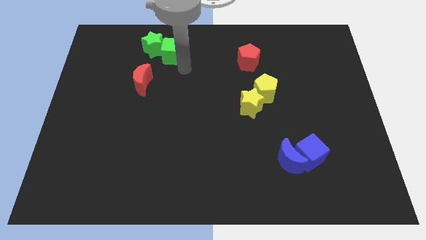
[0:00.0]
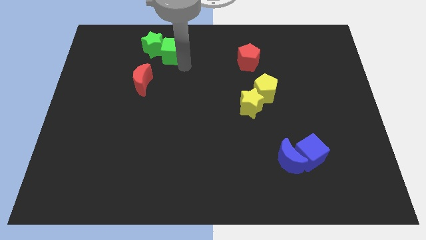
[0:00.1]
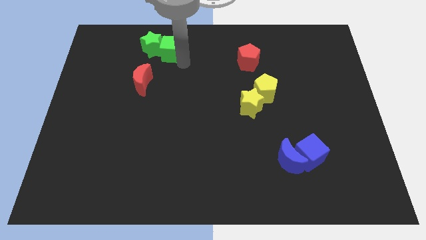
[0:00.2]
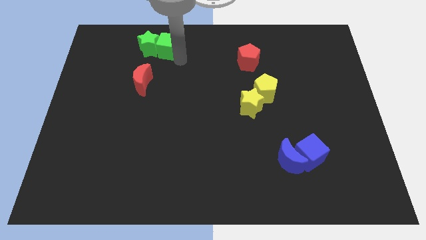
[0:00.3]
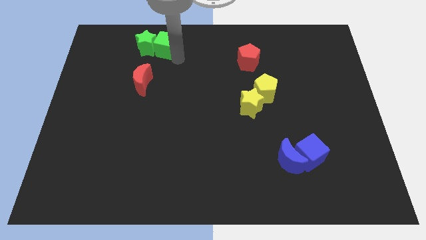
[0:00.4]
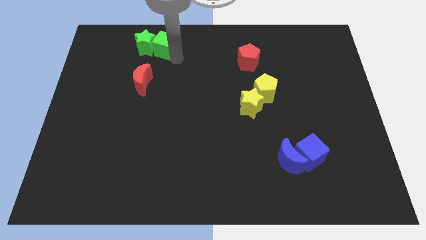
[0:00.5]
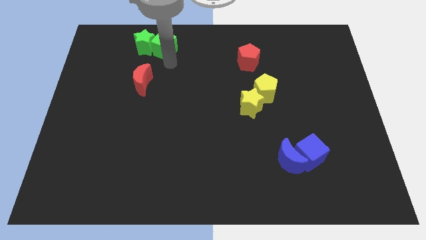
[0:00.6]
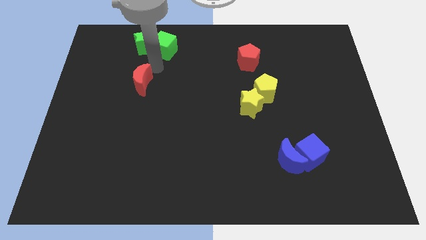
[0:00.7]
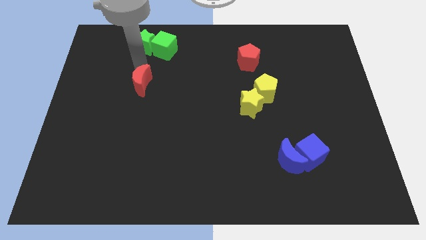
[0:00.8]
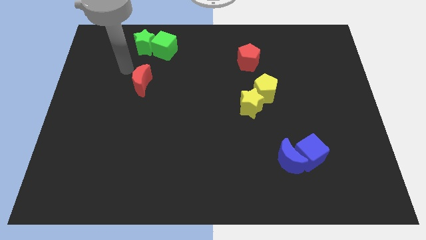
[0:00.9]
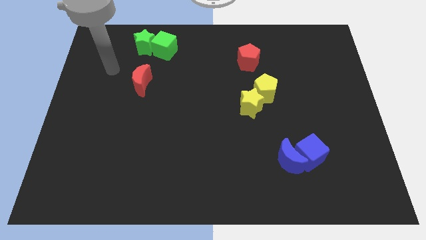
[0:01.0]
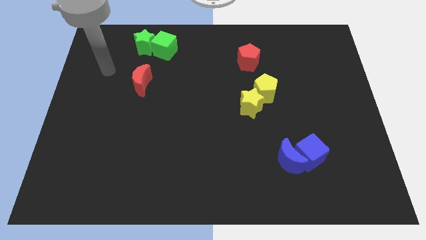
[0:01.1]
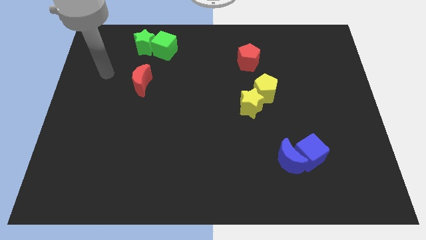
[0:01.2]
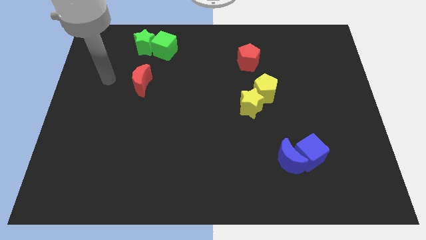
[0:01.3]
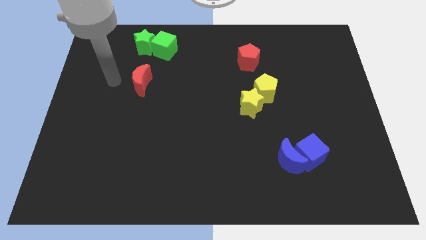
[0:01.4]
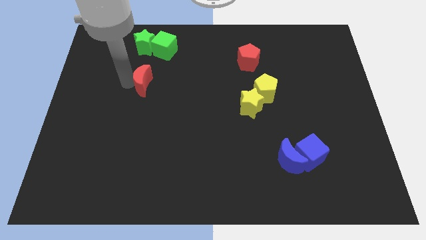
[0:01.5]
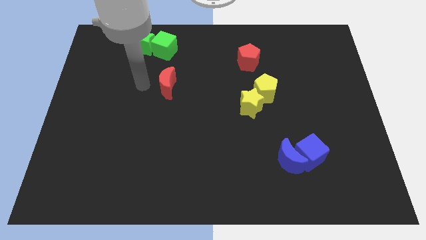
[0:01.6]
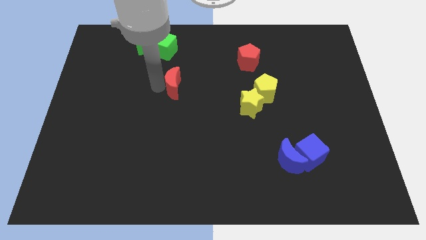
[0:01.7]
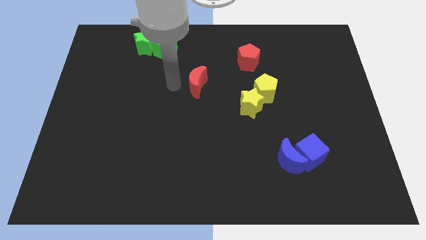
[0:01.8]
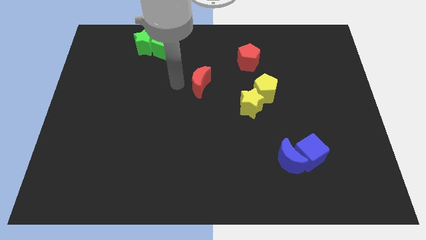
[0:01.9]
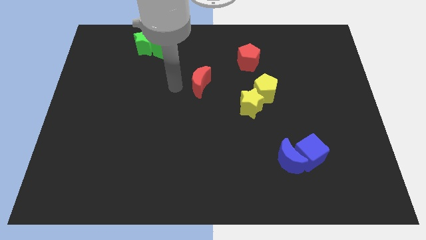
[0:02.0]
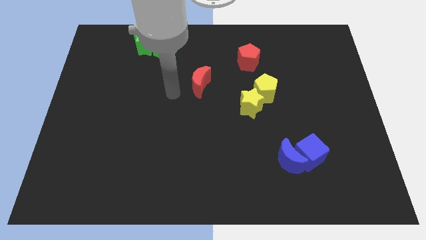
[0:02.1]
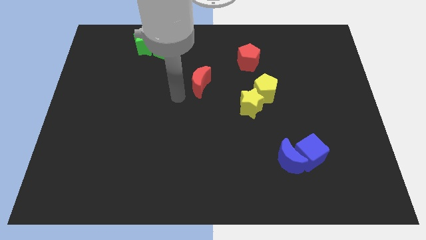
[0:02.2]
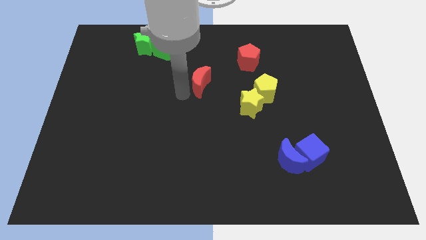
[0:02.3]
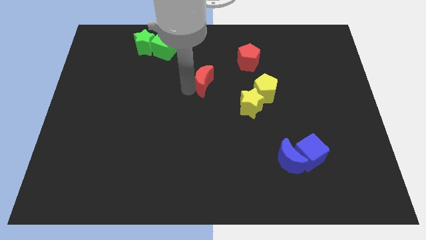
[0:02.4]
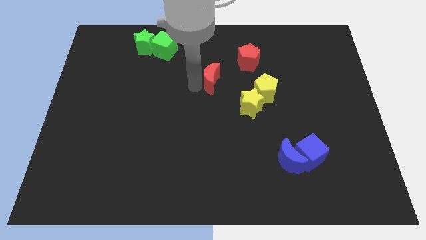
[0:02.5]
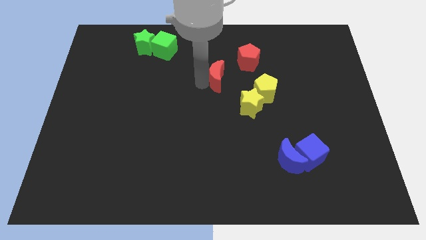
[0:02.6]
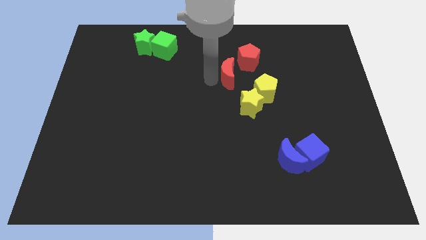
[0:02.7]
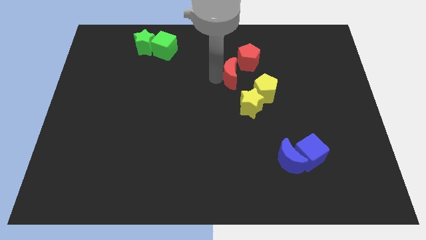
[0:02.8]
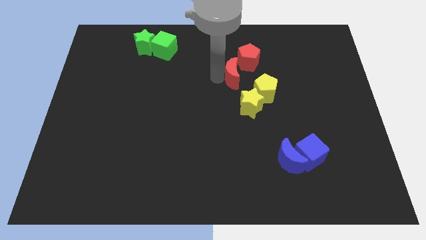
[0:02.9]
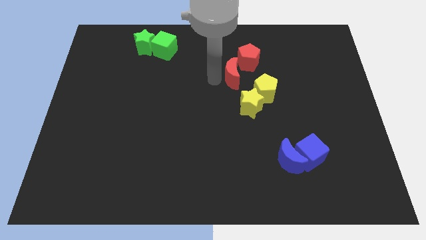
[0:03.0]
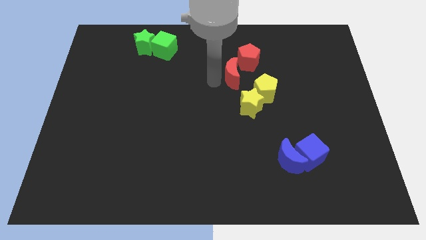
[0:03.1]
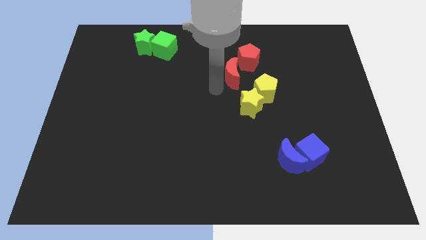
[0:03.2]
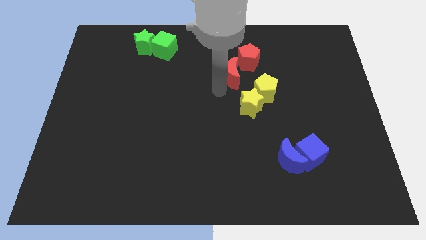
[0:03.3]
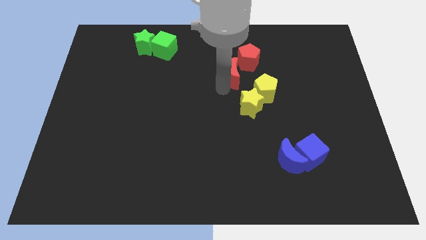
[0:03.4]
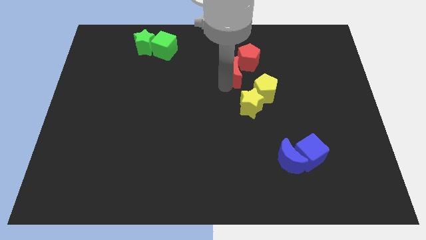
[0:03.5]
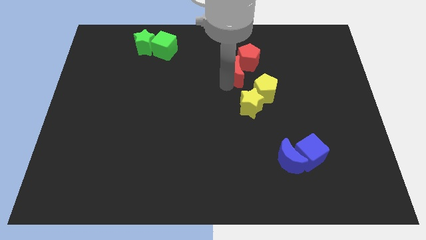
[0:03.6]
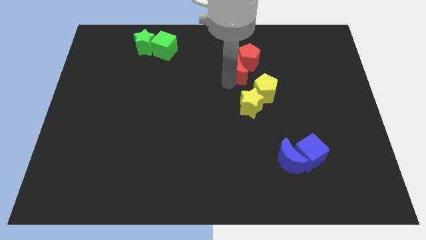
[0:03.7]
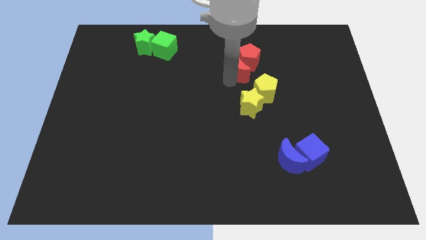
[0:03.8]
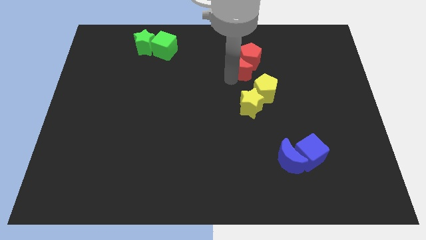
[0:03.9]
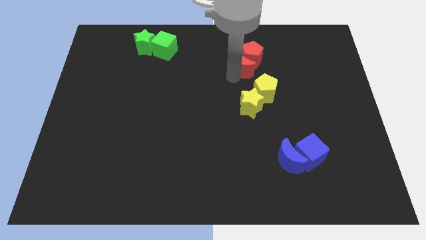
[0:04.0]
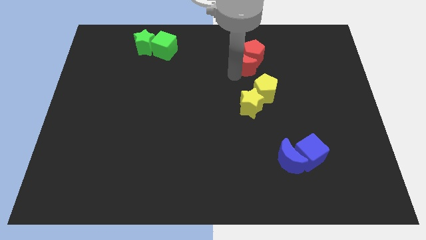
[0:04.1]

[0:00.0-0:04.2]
push the red crescent into red pentagon

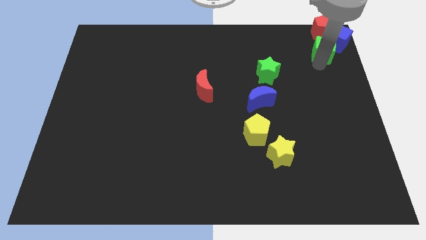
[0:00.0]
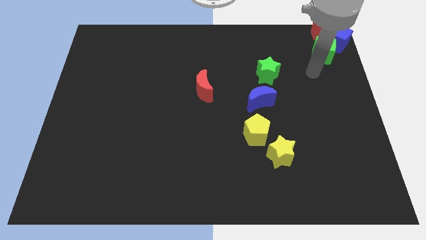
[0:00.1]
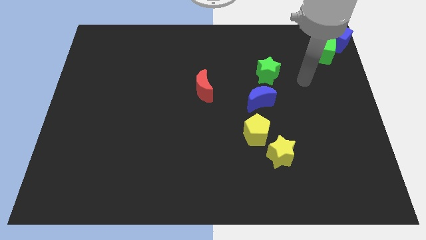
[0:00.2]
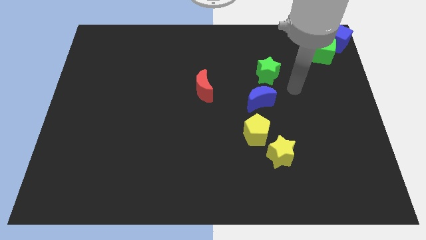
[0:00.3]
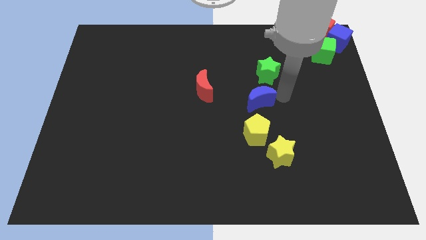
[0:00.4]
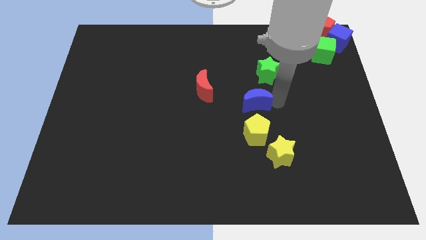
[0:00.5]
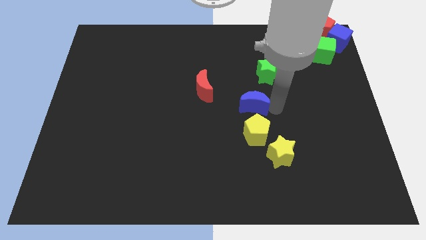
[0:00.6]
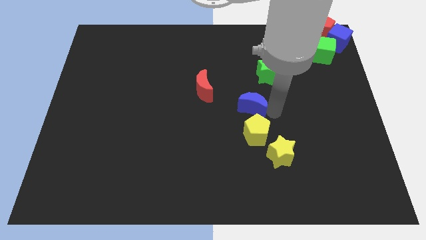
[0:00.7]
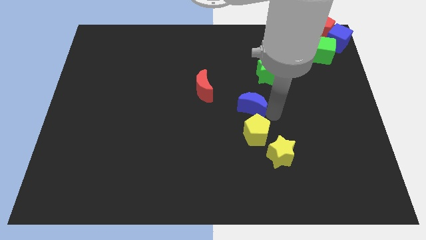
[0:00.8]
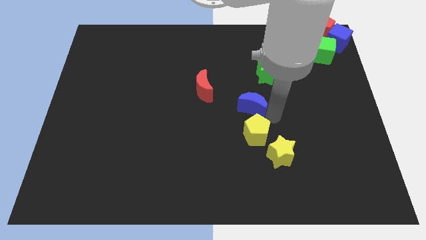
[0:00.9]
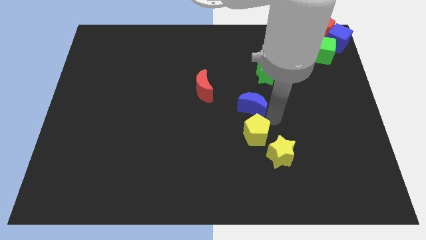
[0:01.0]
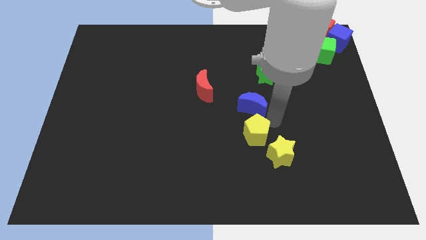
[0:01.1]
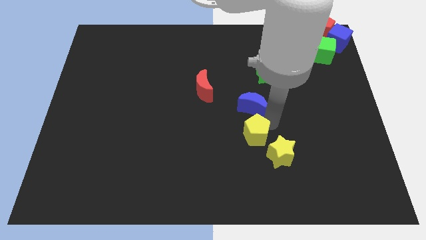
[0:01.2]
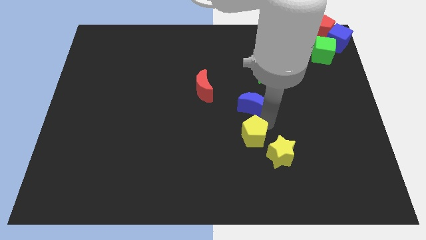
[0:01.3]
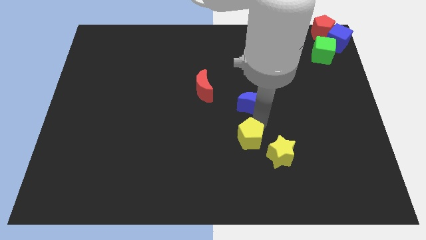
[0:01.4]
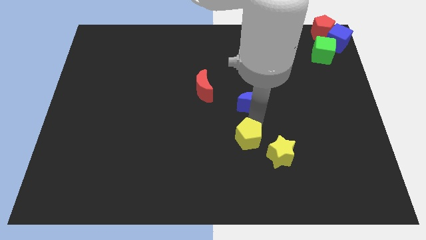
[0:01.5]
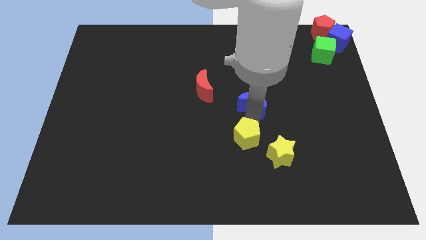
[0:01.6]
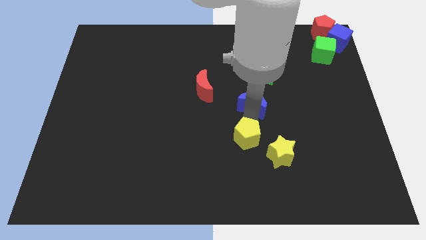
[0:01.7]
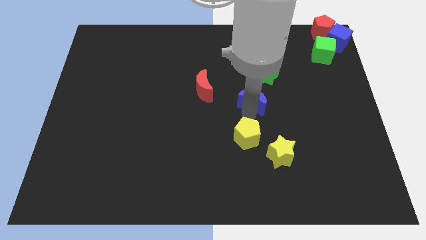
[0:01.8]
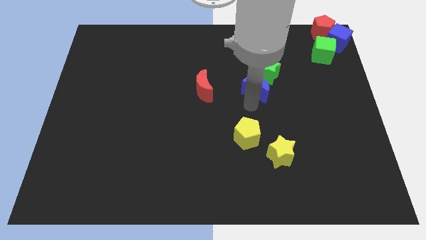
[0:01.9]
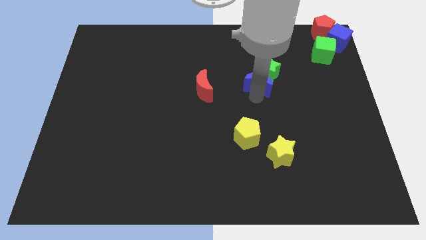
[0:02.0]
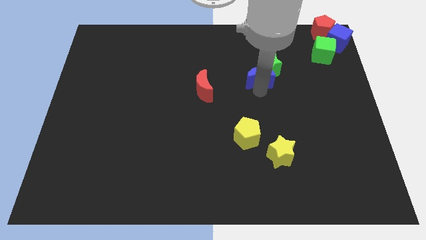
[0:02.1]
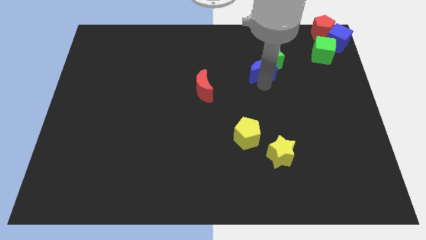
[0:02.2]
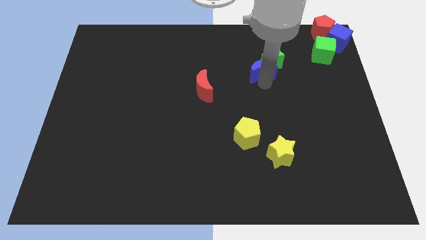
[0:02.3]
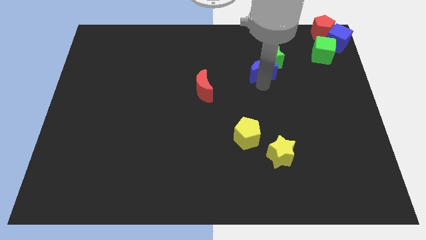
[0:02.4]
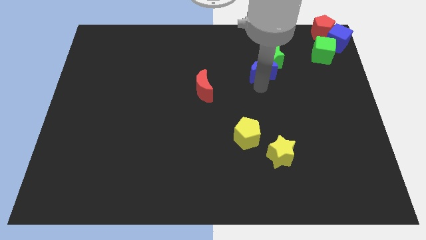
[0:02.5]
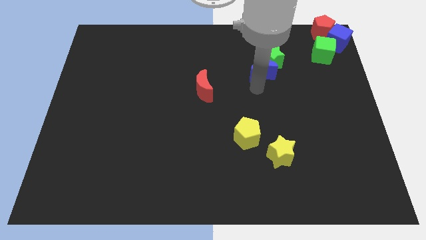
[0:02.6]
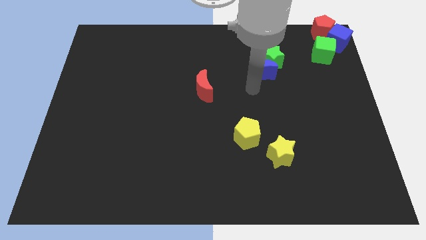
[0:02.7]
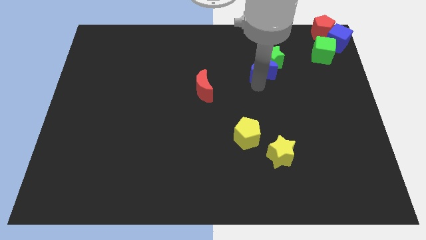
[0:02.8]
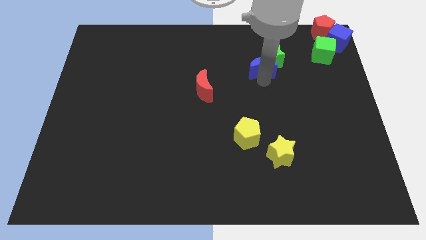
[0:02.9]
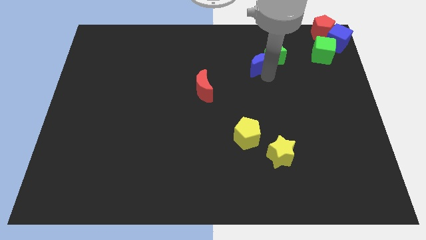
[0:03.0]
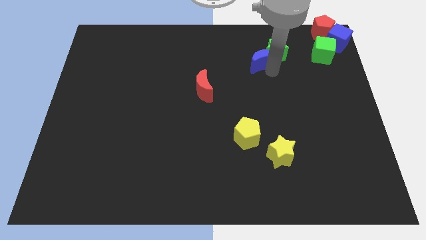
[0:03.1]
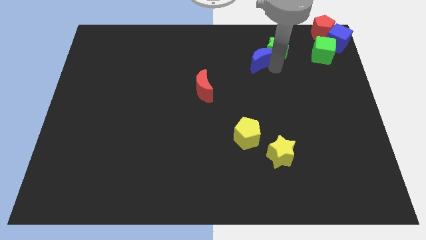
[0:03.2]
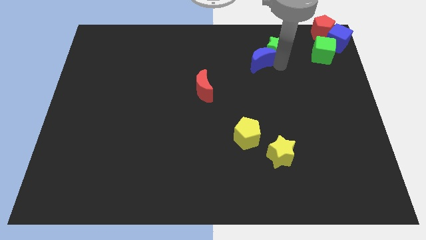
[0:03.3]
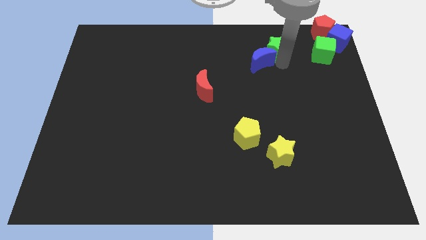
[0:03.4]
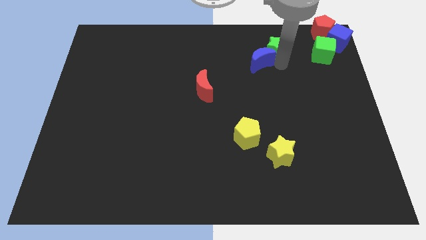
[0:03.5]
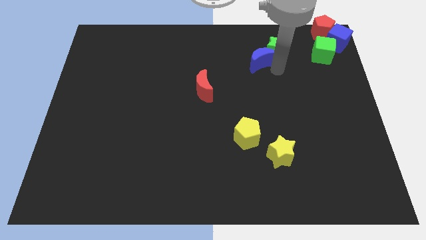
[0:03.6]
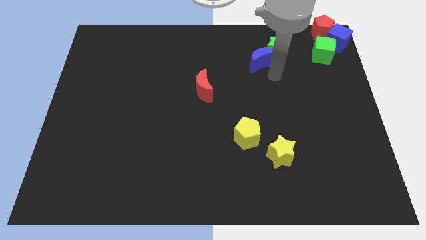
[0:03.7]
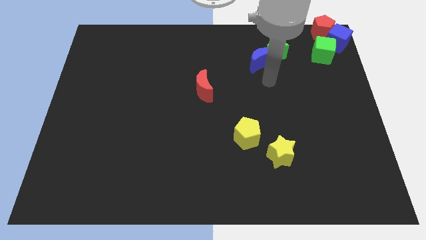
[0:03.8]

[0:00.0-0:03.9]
push the blue crescent into the green star

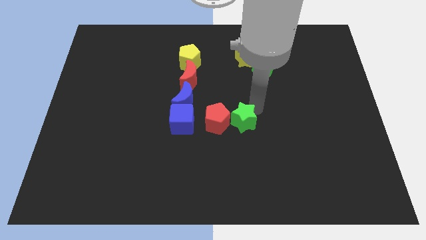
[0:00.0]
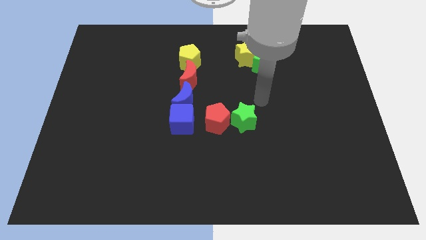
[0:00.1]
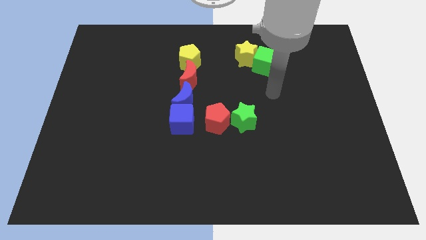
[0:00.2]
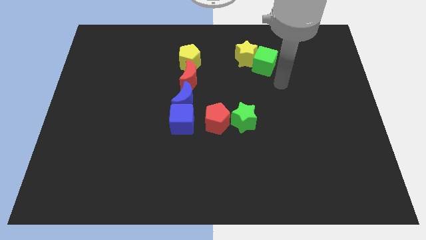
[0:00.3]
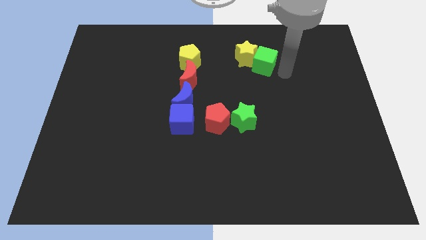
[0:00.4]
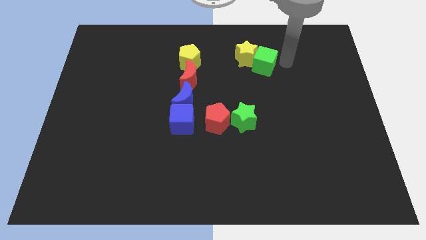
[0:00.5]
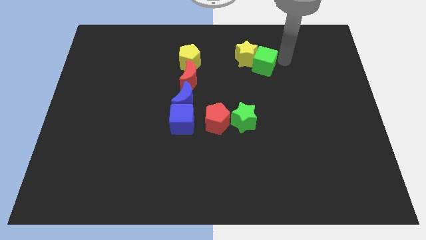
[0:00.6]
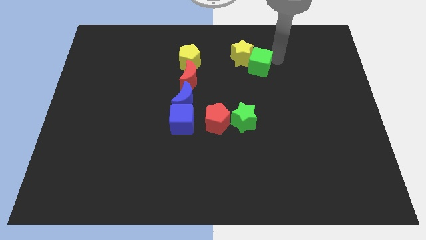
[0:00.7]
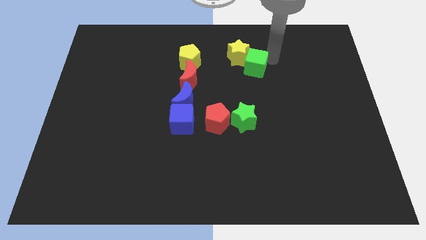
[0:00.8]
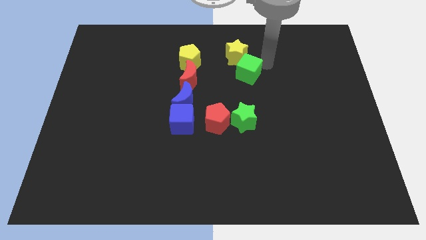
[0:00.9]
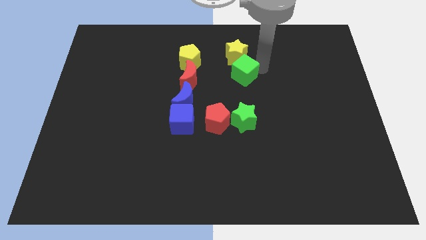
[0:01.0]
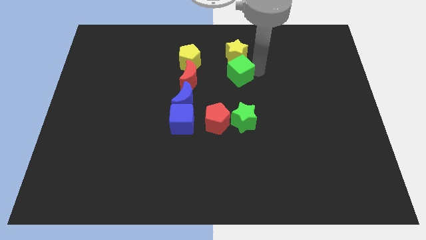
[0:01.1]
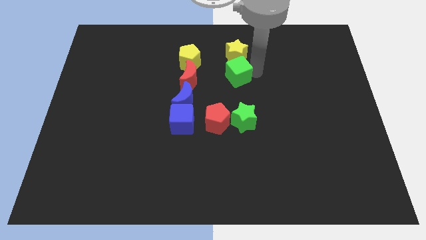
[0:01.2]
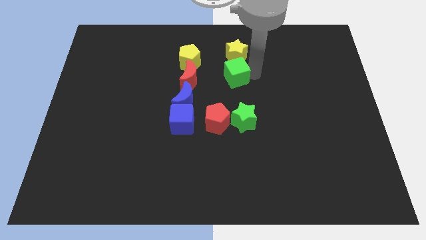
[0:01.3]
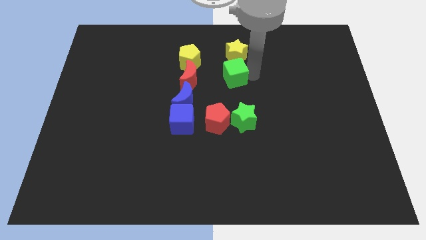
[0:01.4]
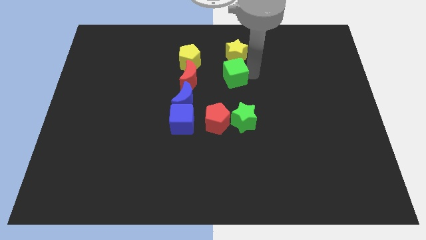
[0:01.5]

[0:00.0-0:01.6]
place the green cube in between the green star and yellow star
